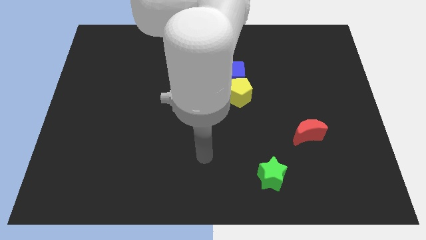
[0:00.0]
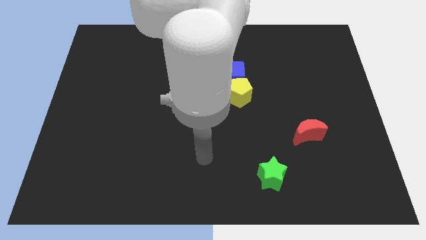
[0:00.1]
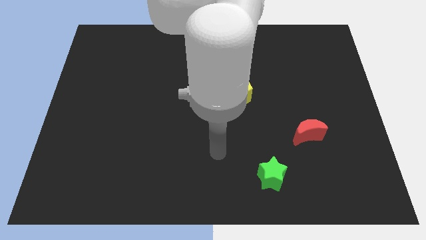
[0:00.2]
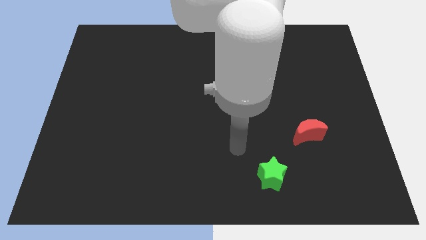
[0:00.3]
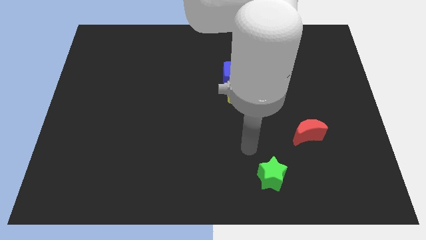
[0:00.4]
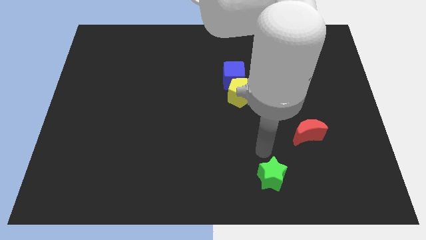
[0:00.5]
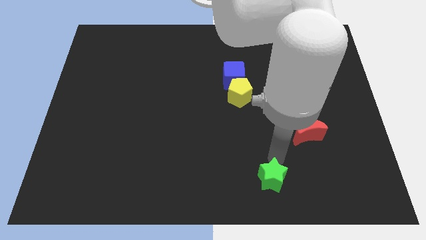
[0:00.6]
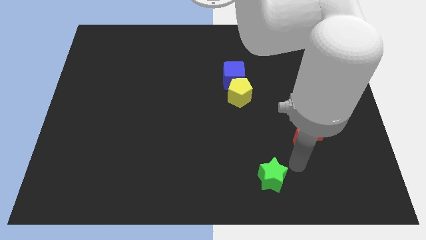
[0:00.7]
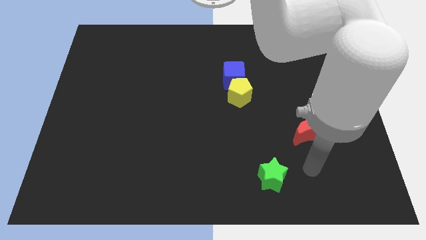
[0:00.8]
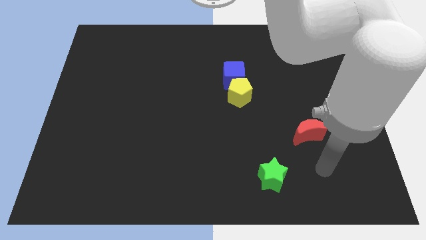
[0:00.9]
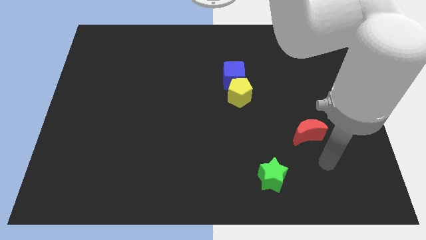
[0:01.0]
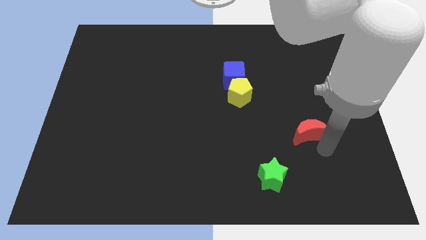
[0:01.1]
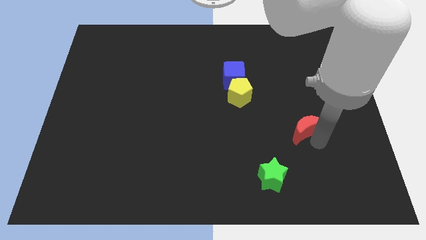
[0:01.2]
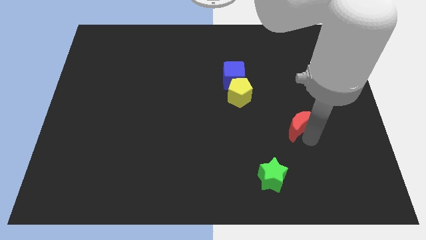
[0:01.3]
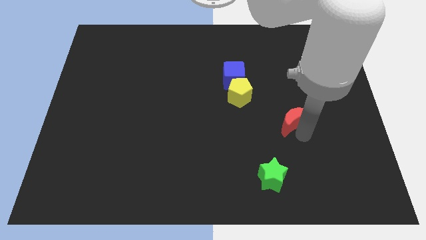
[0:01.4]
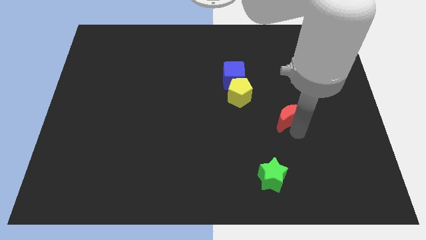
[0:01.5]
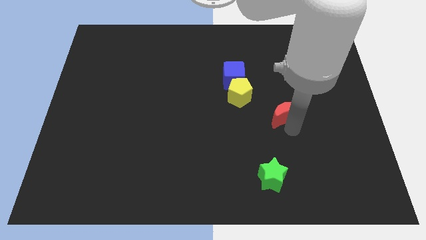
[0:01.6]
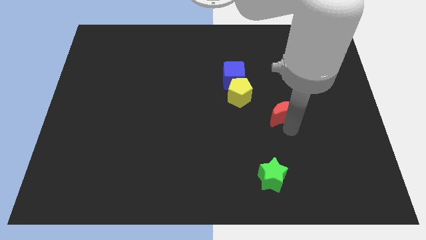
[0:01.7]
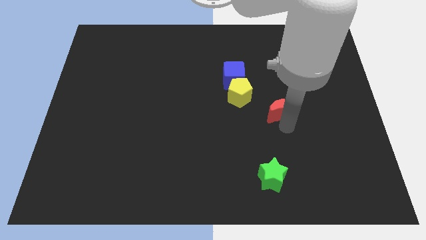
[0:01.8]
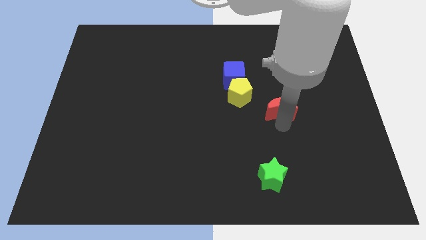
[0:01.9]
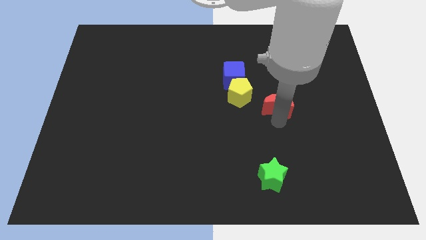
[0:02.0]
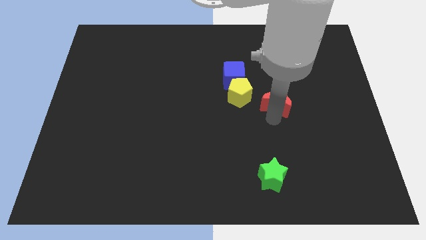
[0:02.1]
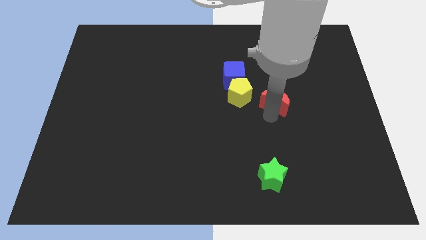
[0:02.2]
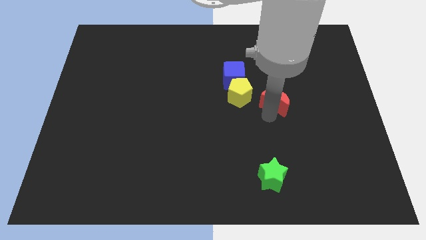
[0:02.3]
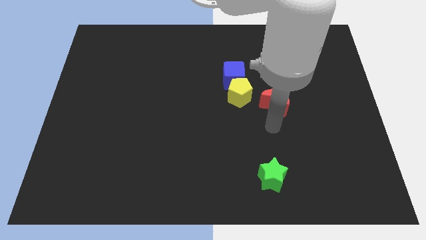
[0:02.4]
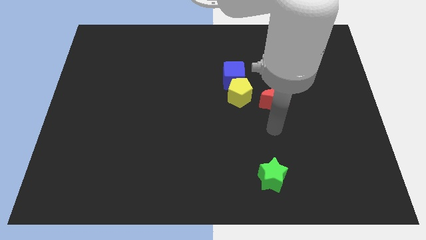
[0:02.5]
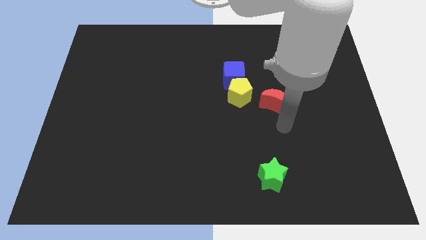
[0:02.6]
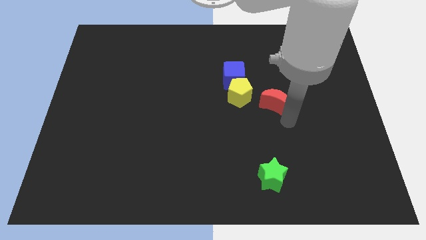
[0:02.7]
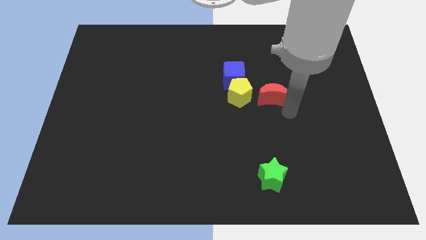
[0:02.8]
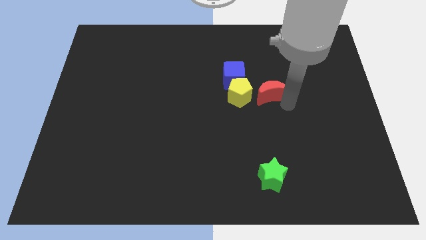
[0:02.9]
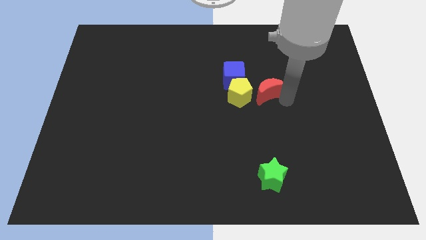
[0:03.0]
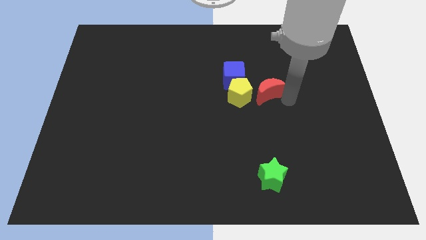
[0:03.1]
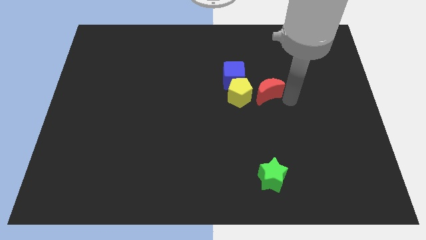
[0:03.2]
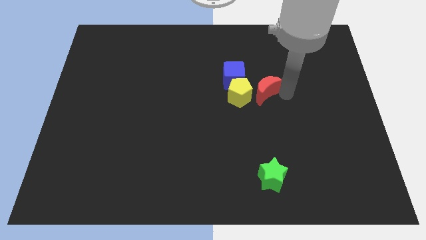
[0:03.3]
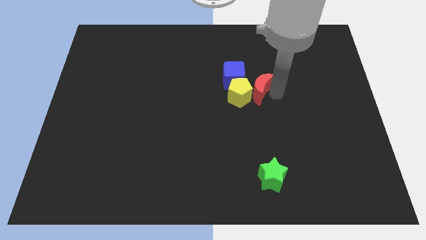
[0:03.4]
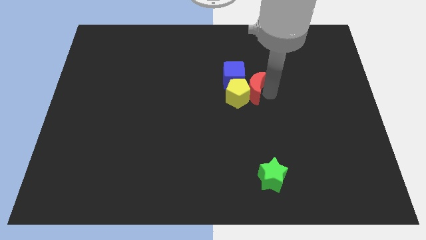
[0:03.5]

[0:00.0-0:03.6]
slide the moon towards the pentagon

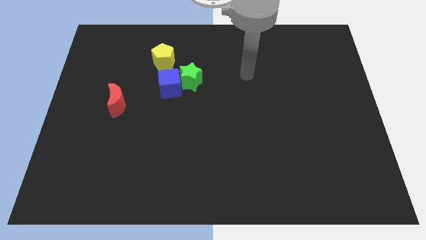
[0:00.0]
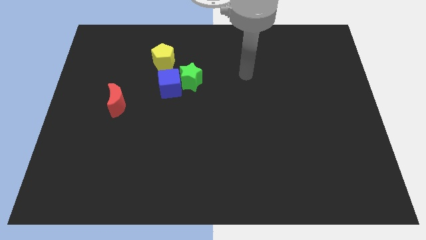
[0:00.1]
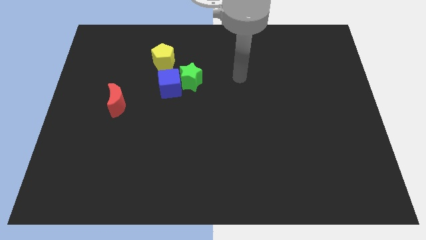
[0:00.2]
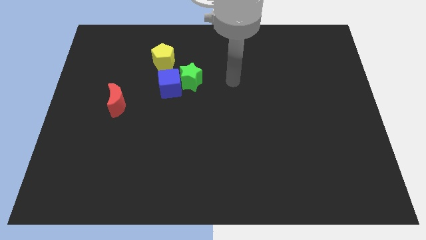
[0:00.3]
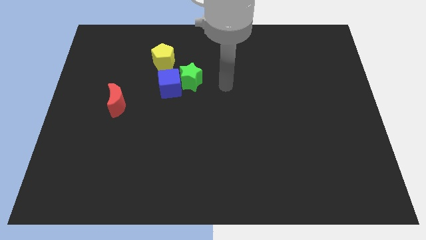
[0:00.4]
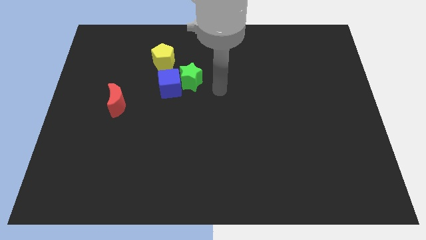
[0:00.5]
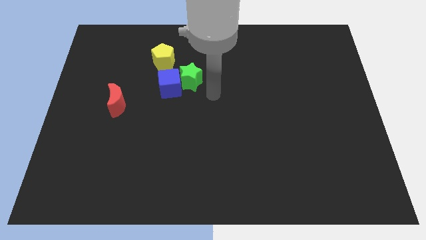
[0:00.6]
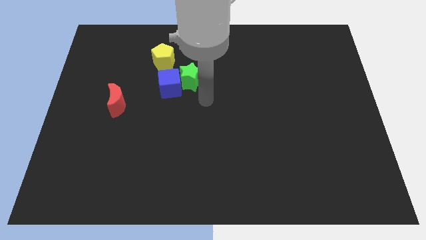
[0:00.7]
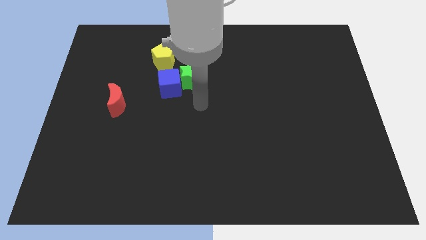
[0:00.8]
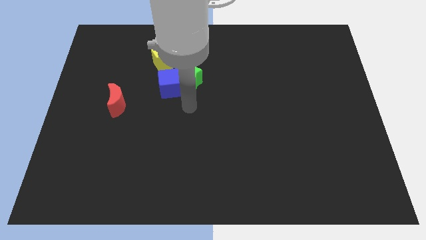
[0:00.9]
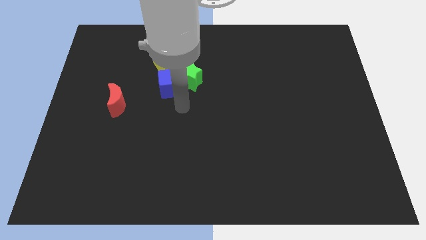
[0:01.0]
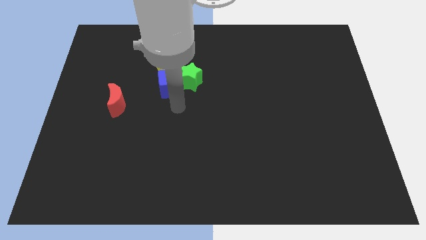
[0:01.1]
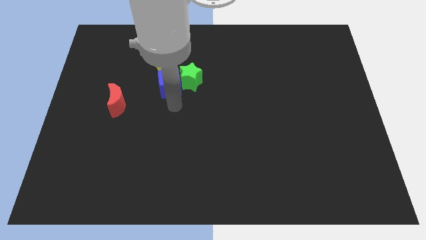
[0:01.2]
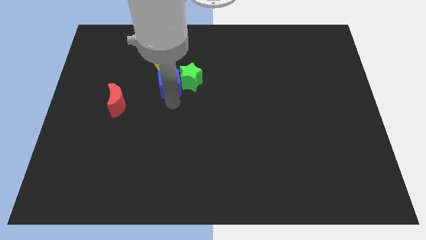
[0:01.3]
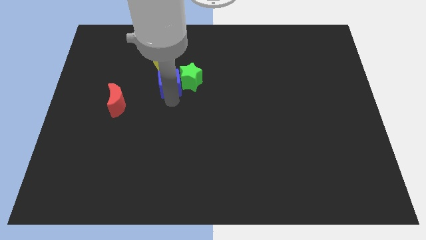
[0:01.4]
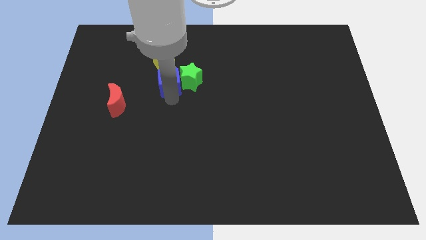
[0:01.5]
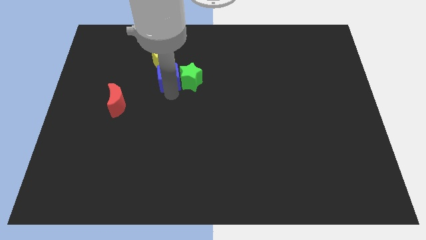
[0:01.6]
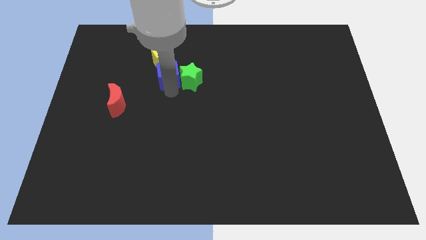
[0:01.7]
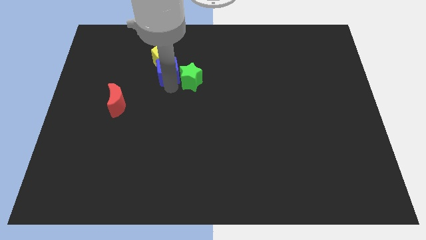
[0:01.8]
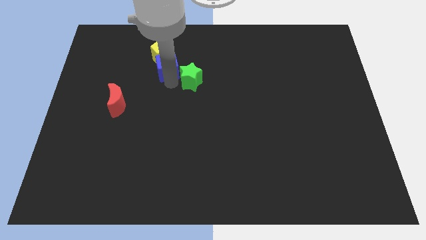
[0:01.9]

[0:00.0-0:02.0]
move the blue block to the pentagon

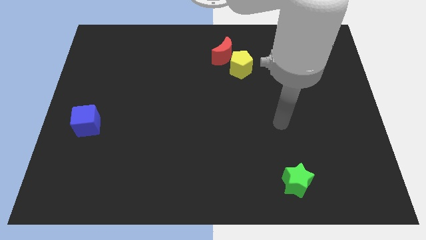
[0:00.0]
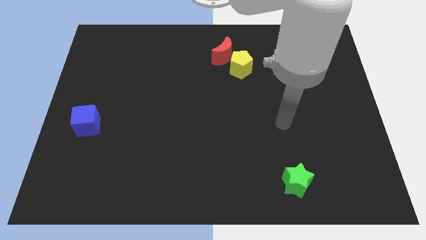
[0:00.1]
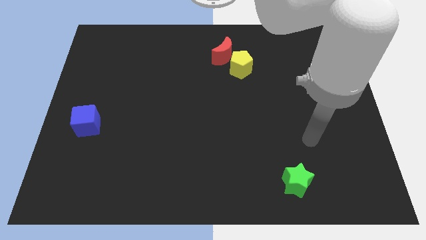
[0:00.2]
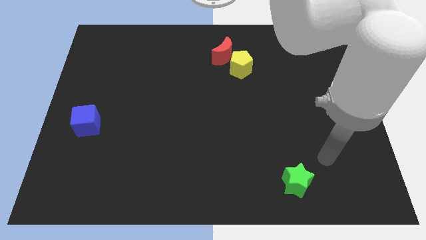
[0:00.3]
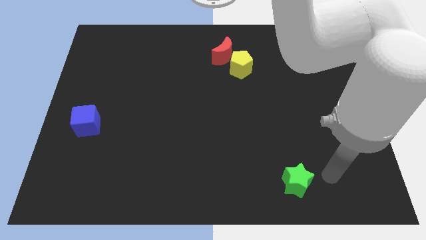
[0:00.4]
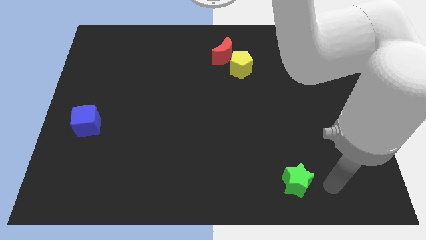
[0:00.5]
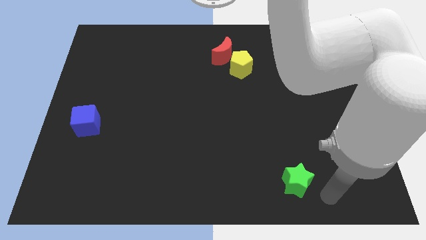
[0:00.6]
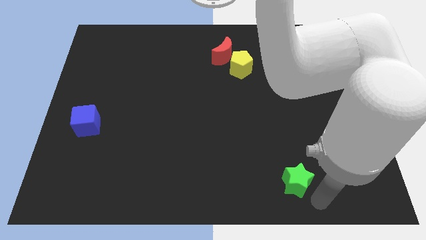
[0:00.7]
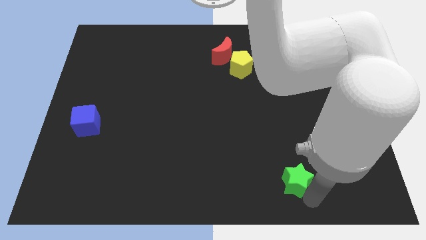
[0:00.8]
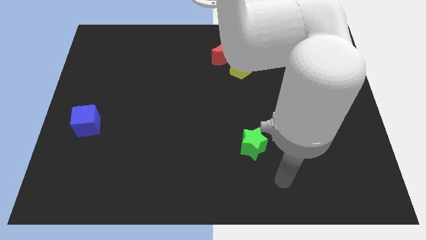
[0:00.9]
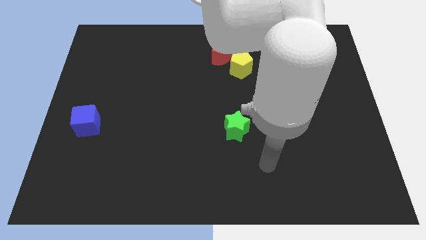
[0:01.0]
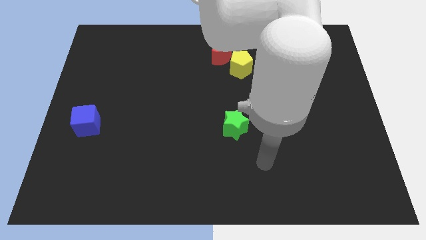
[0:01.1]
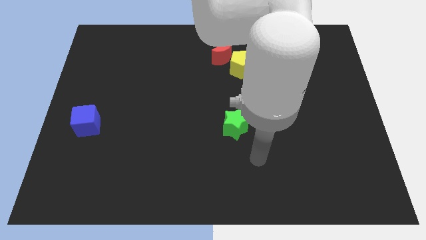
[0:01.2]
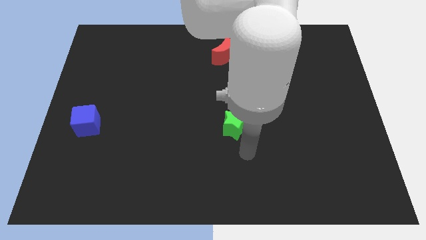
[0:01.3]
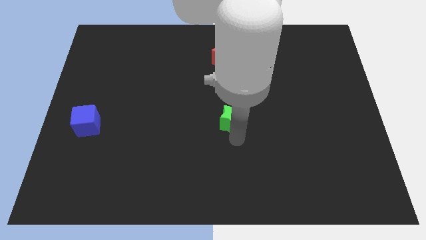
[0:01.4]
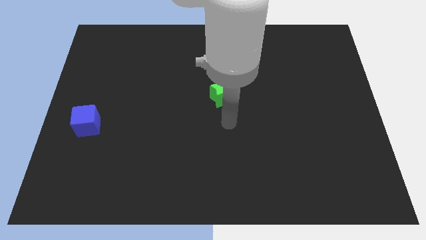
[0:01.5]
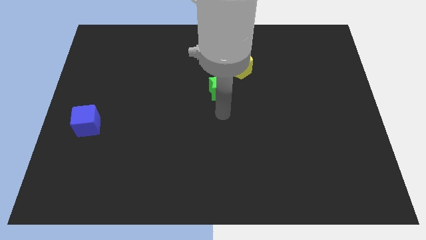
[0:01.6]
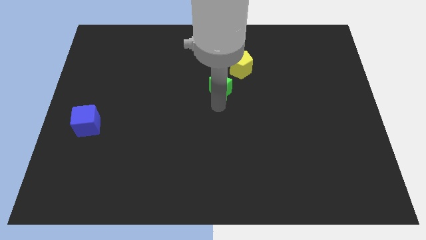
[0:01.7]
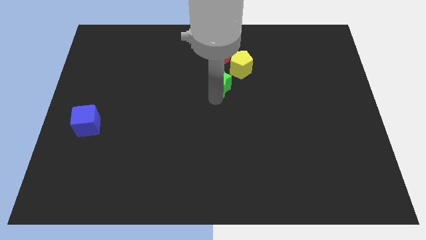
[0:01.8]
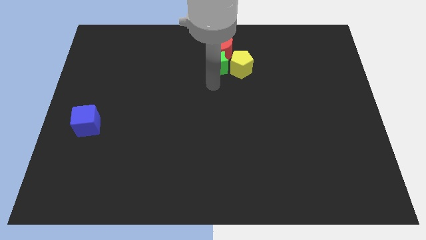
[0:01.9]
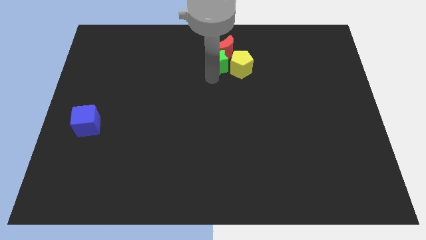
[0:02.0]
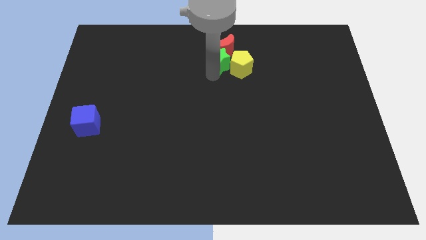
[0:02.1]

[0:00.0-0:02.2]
move the green block to the red moon

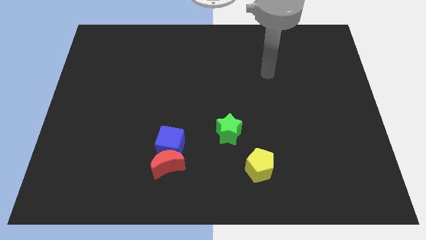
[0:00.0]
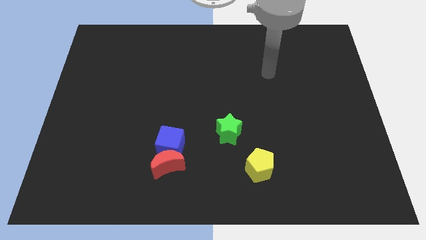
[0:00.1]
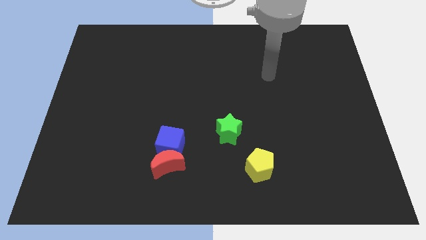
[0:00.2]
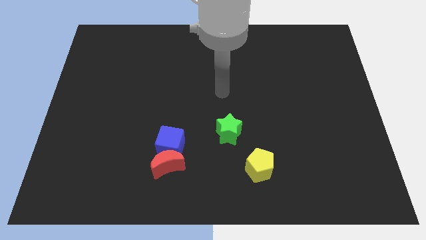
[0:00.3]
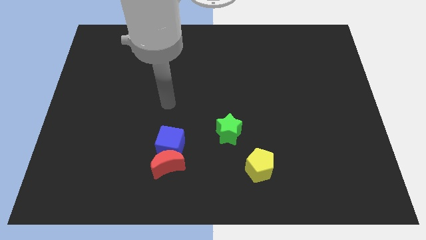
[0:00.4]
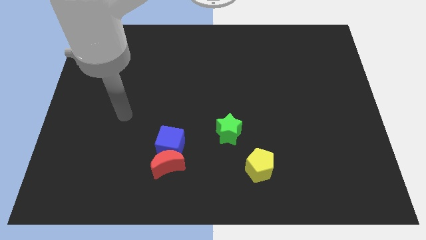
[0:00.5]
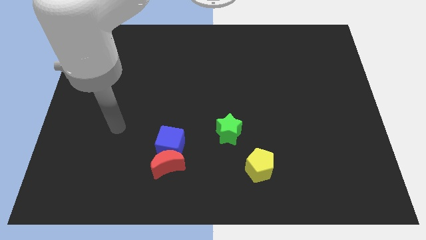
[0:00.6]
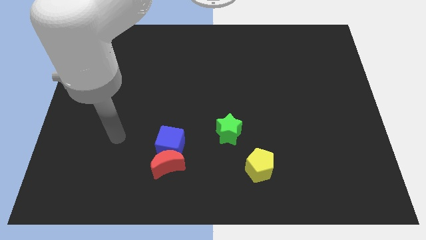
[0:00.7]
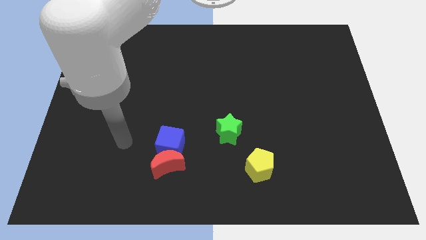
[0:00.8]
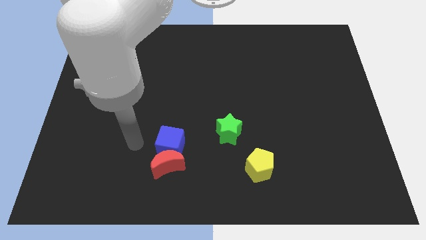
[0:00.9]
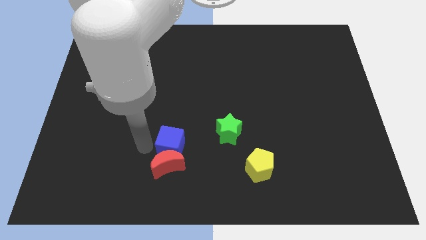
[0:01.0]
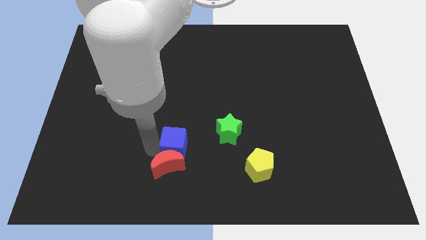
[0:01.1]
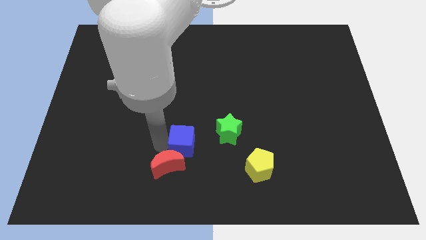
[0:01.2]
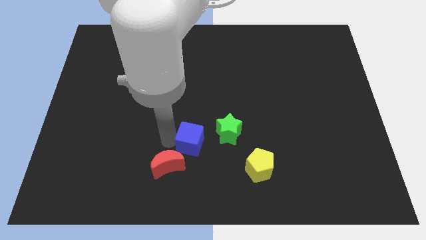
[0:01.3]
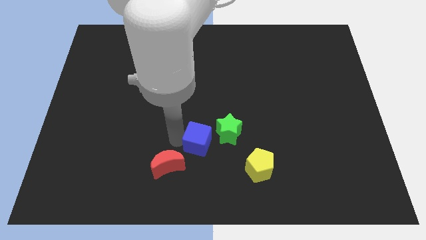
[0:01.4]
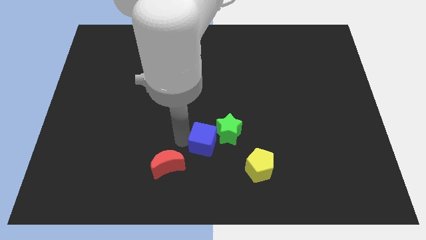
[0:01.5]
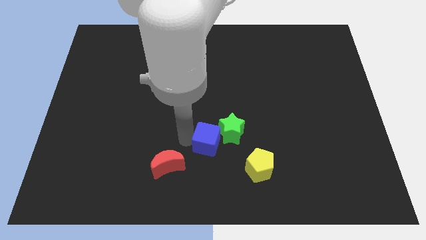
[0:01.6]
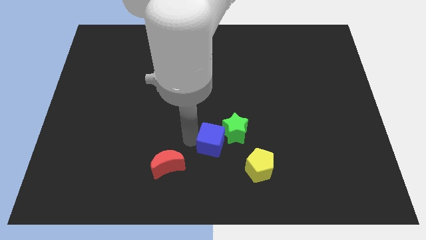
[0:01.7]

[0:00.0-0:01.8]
push the cube next to the green block
